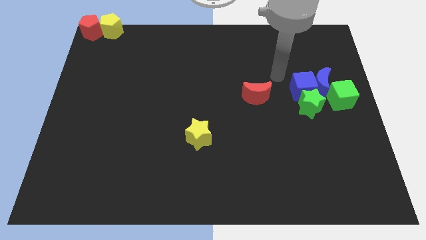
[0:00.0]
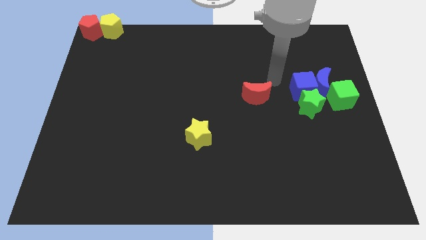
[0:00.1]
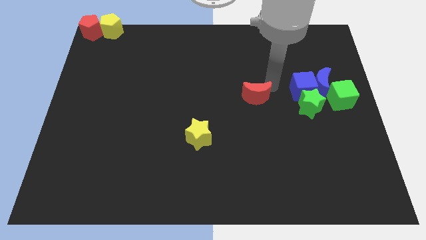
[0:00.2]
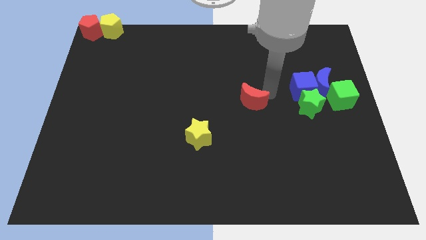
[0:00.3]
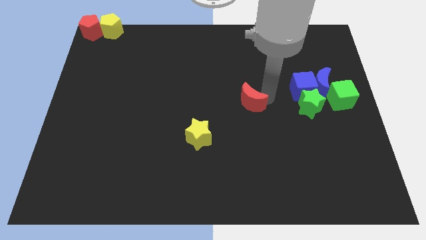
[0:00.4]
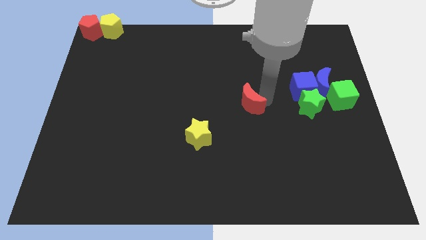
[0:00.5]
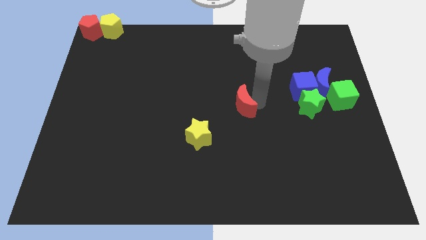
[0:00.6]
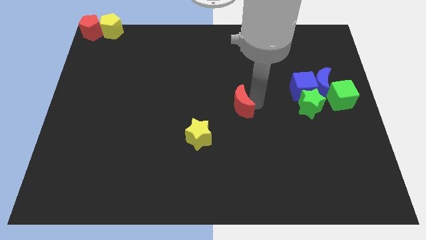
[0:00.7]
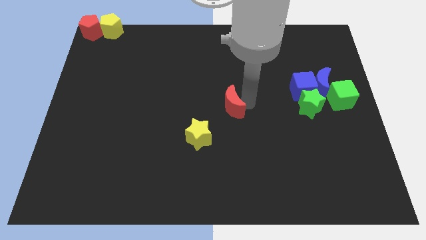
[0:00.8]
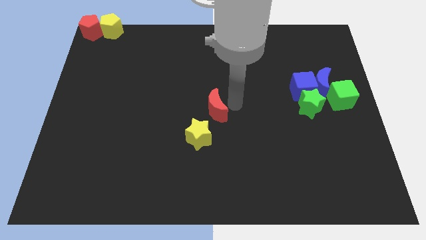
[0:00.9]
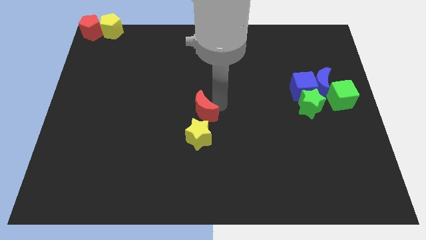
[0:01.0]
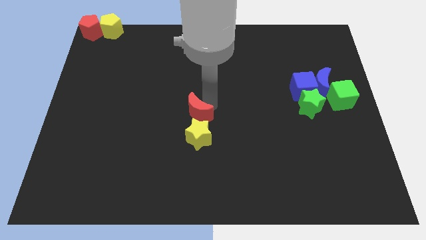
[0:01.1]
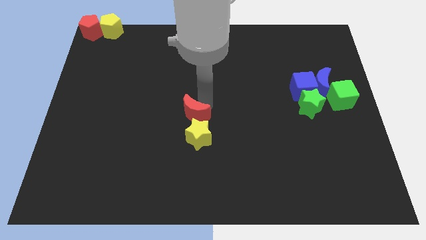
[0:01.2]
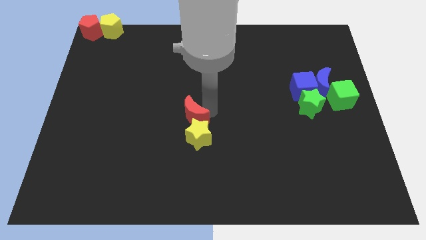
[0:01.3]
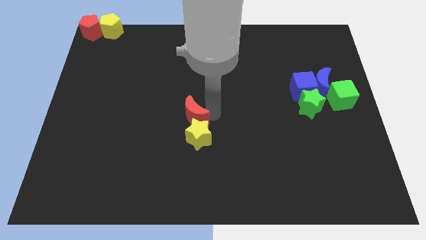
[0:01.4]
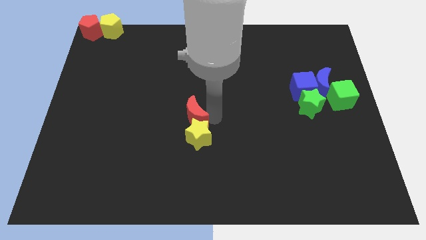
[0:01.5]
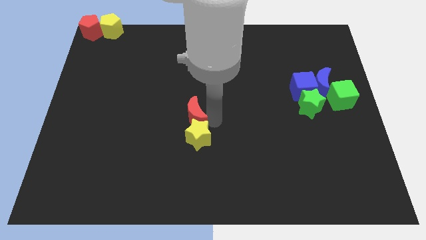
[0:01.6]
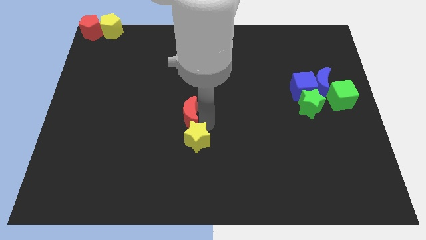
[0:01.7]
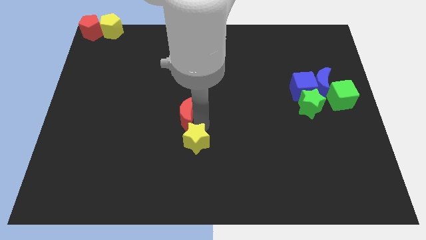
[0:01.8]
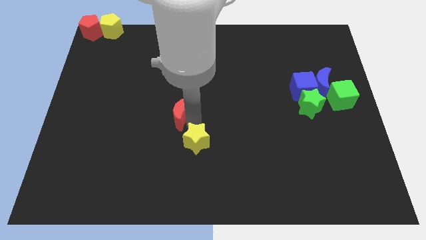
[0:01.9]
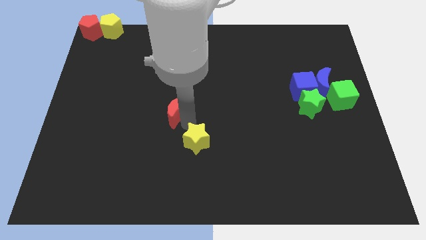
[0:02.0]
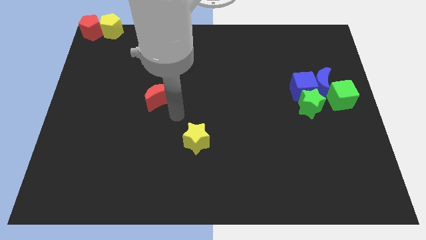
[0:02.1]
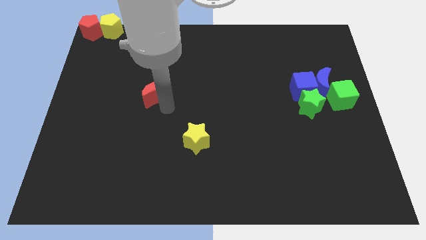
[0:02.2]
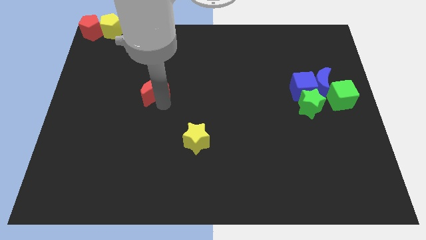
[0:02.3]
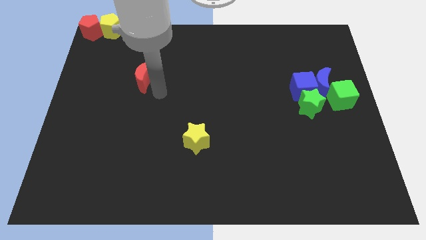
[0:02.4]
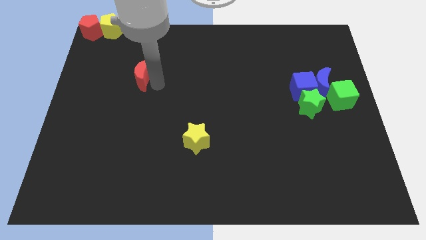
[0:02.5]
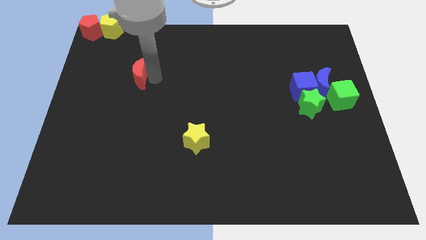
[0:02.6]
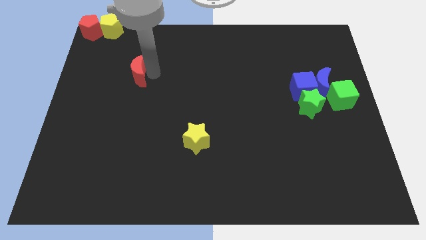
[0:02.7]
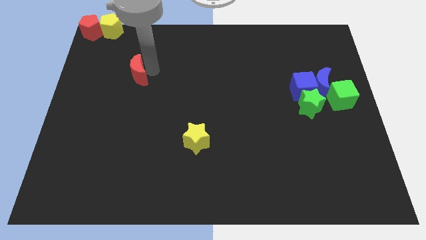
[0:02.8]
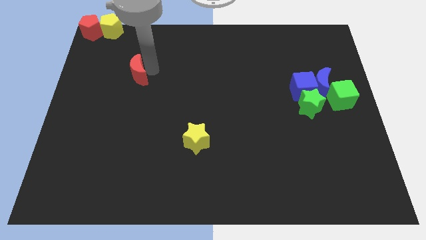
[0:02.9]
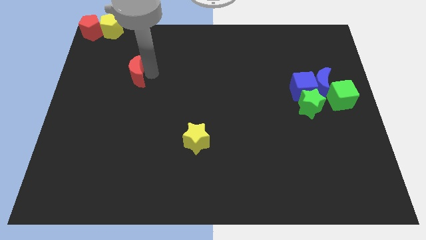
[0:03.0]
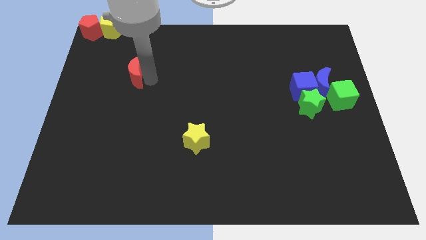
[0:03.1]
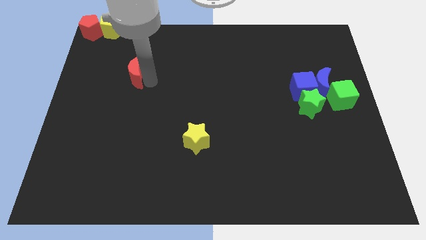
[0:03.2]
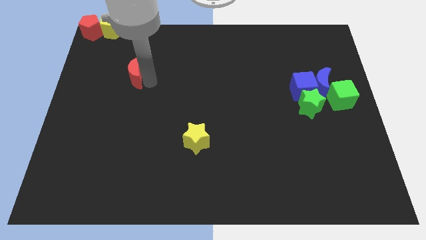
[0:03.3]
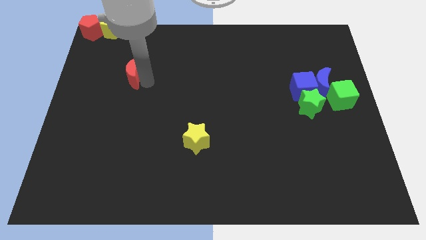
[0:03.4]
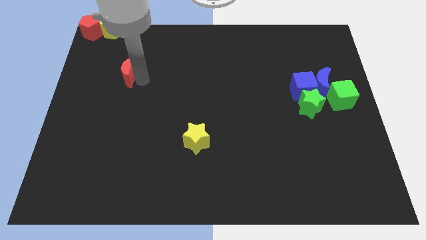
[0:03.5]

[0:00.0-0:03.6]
drag the red moon diagonally top left to the yellow star

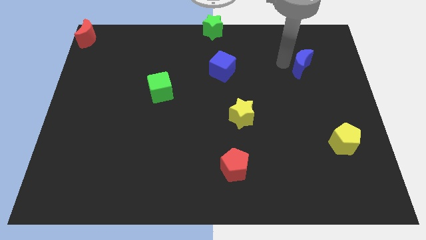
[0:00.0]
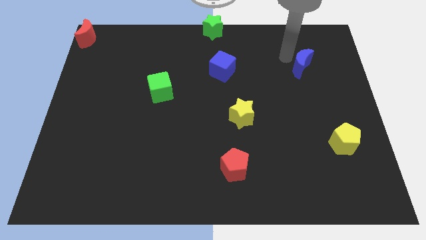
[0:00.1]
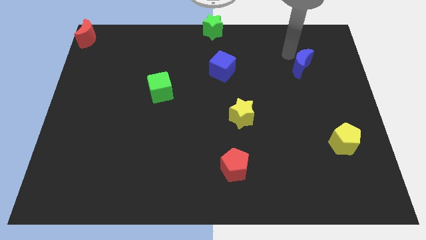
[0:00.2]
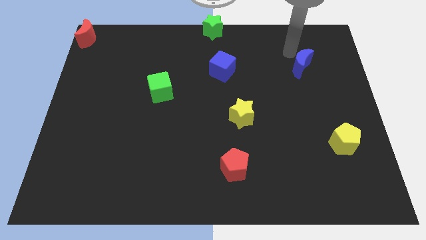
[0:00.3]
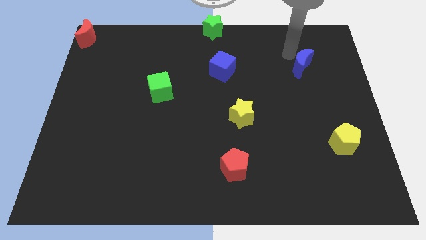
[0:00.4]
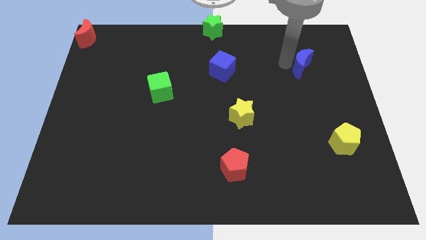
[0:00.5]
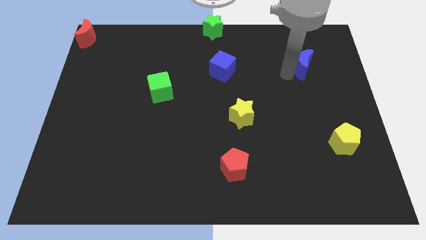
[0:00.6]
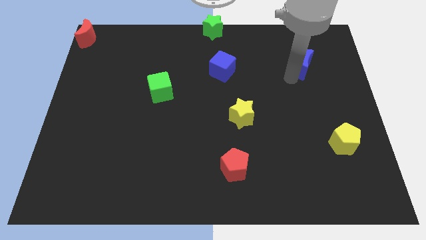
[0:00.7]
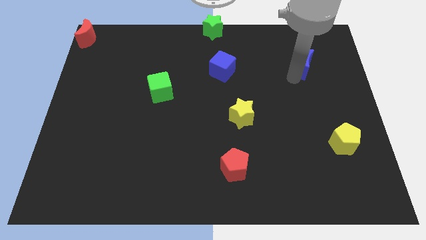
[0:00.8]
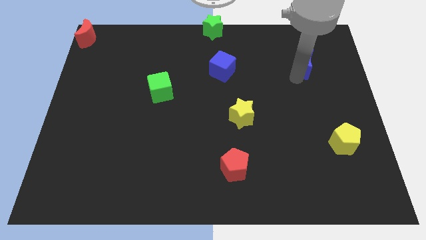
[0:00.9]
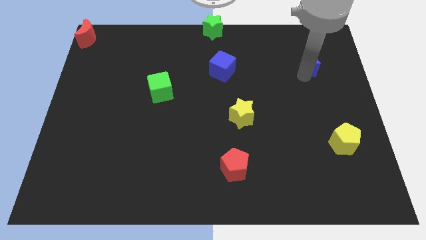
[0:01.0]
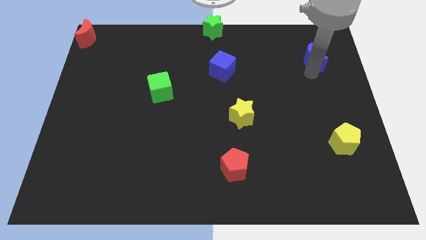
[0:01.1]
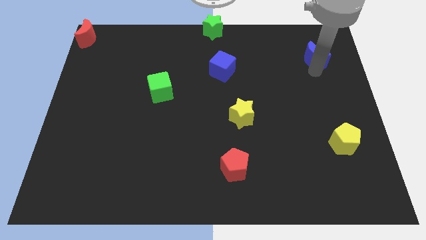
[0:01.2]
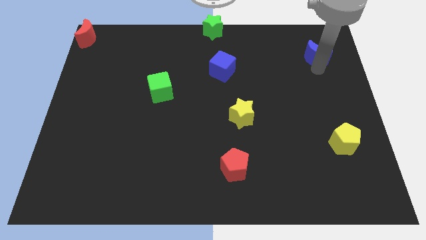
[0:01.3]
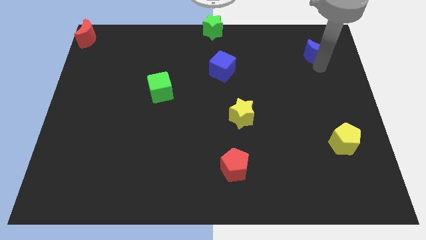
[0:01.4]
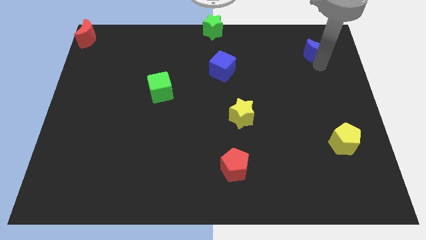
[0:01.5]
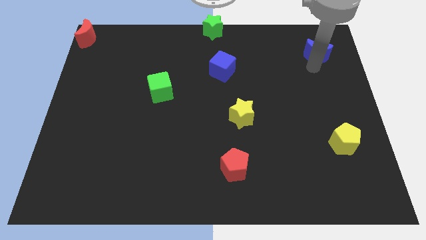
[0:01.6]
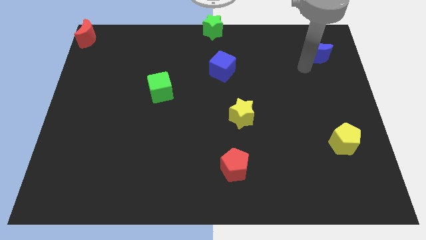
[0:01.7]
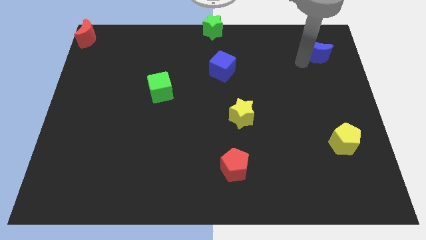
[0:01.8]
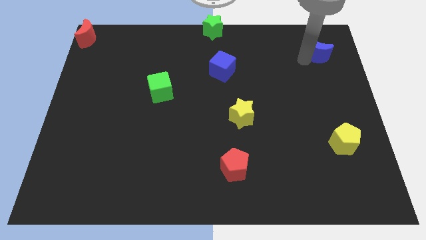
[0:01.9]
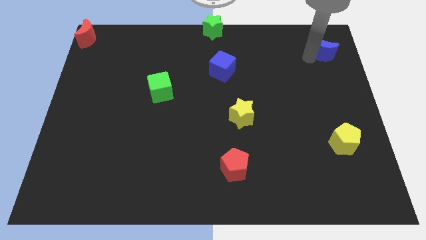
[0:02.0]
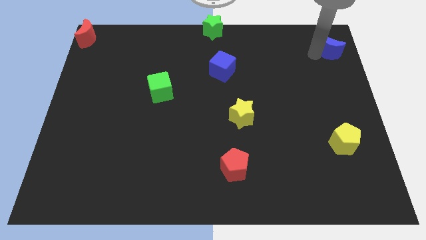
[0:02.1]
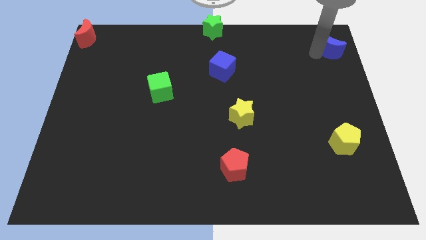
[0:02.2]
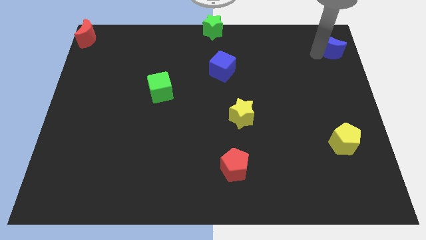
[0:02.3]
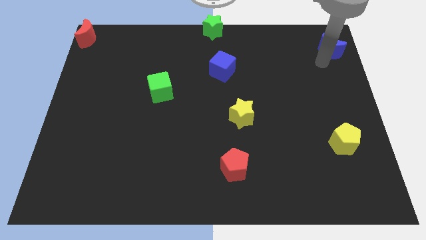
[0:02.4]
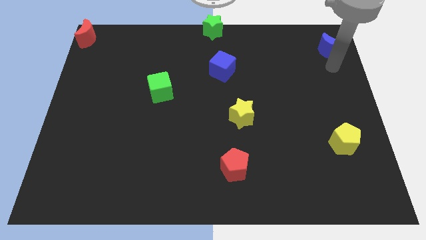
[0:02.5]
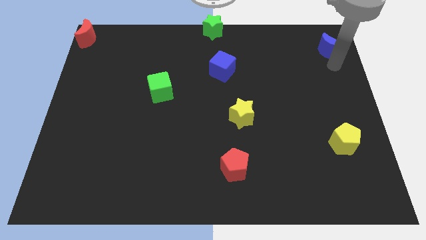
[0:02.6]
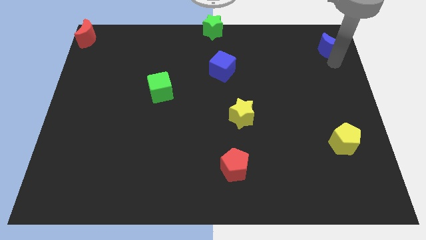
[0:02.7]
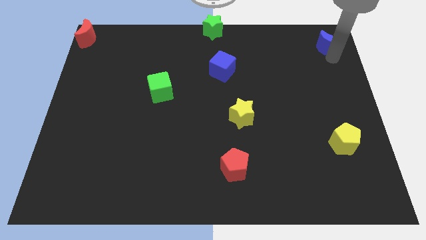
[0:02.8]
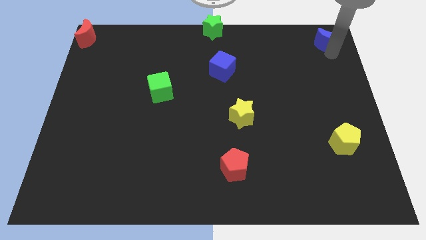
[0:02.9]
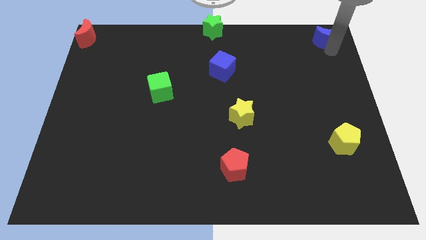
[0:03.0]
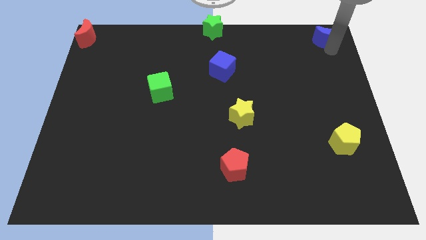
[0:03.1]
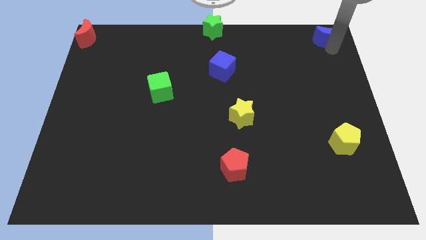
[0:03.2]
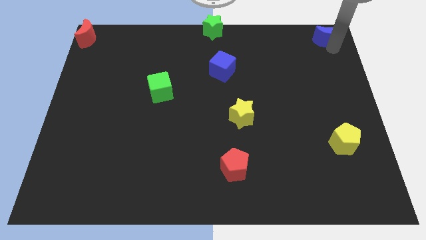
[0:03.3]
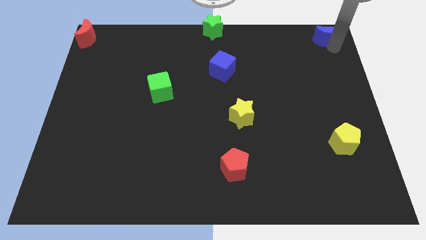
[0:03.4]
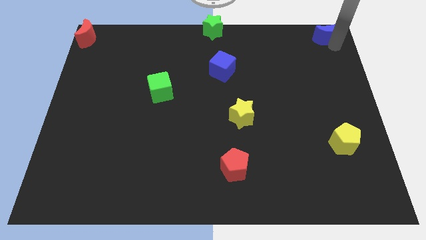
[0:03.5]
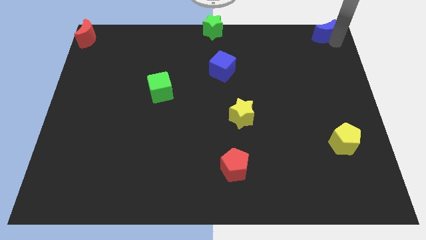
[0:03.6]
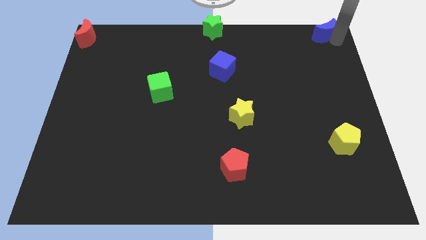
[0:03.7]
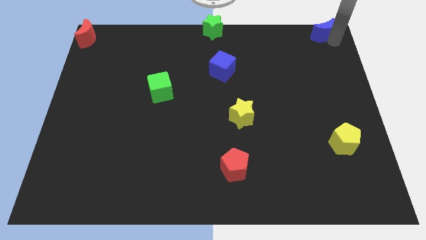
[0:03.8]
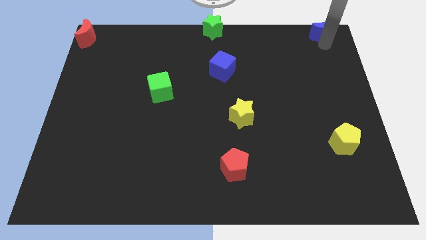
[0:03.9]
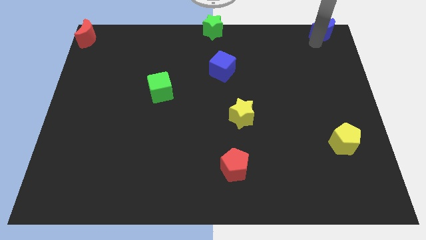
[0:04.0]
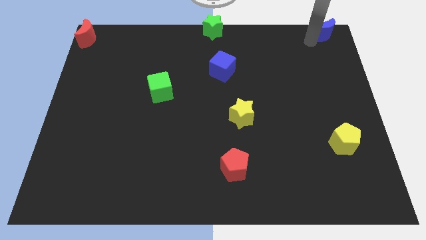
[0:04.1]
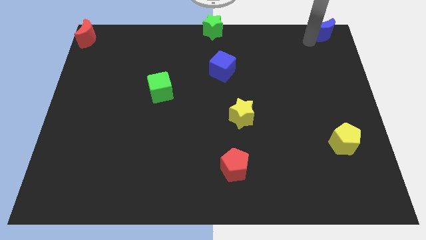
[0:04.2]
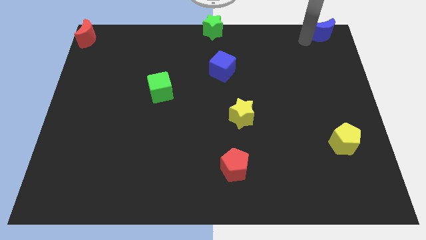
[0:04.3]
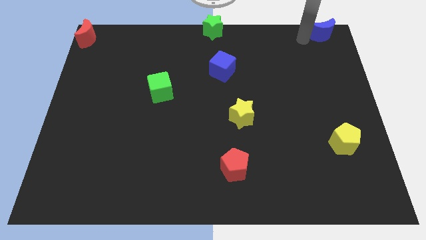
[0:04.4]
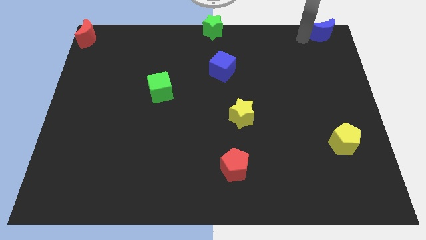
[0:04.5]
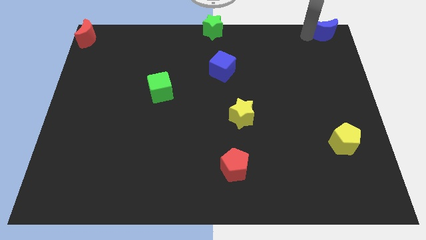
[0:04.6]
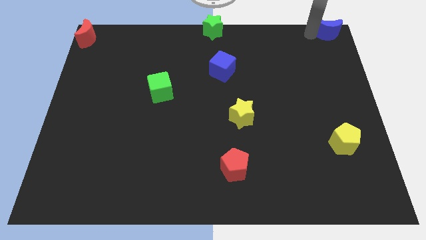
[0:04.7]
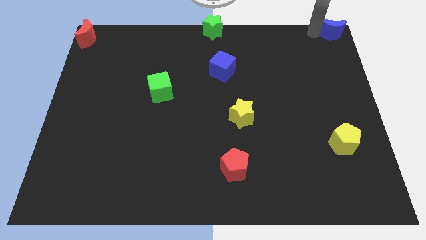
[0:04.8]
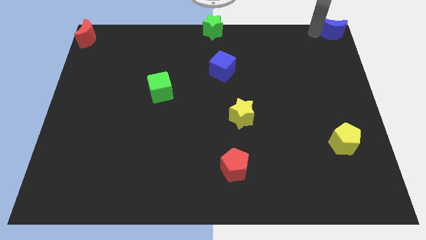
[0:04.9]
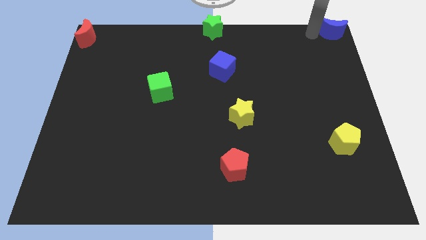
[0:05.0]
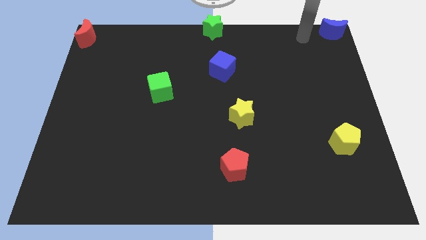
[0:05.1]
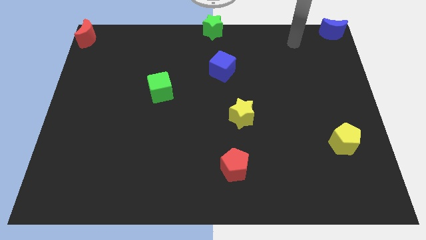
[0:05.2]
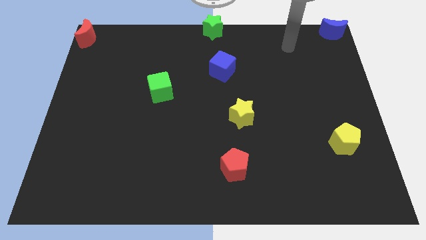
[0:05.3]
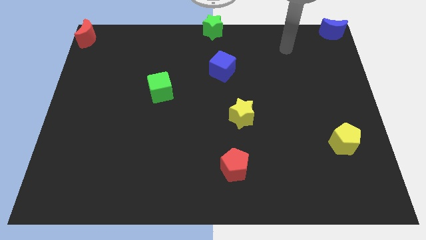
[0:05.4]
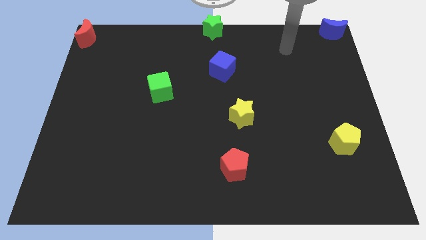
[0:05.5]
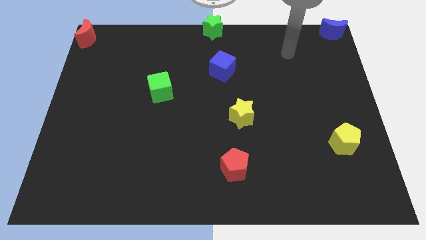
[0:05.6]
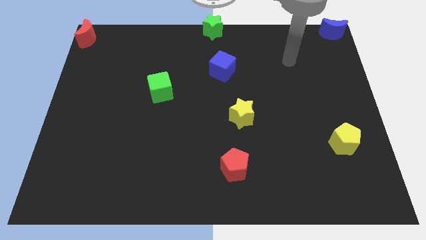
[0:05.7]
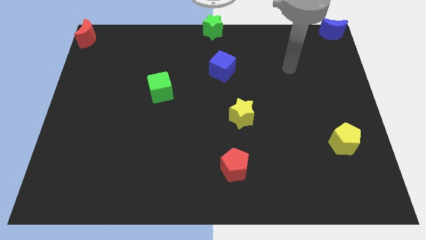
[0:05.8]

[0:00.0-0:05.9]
slide blue moon to the top right corner of the board
